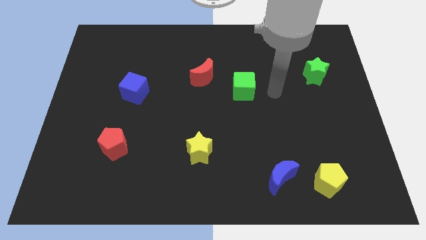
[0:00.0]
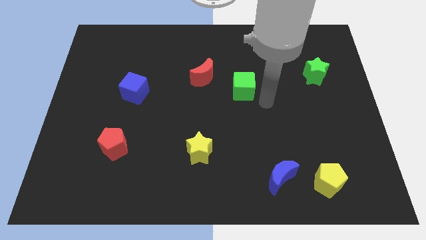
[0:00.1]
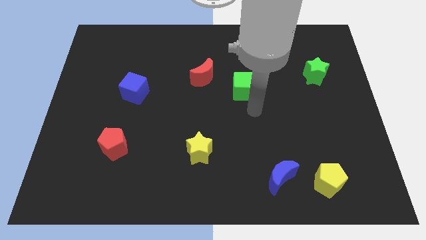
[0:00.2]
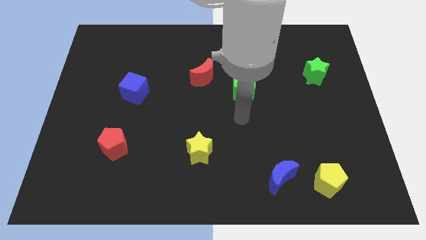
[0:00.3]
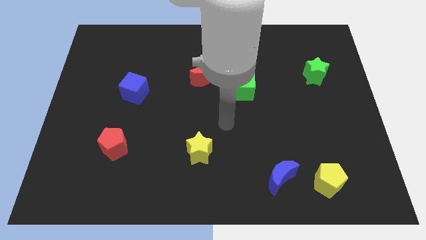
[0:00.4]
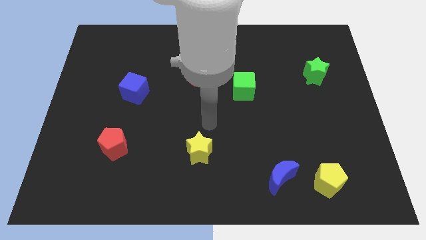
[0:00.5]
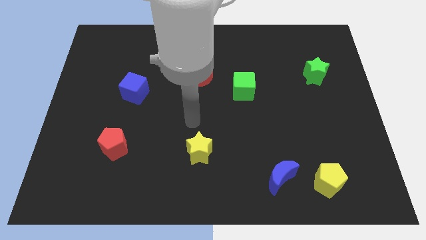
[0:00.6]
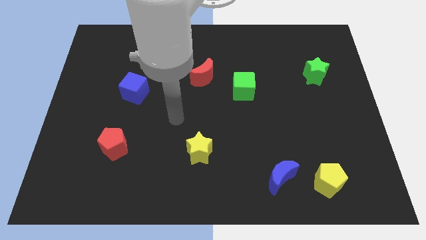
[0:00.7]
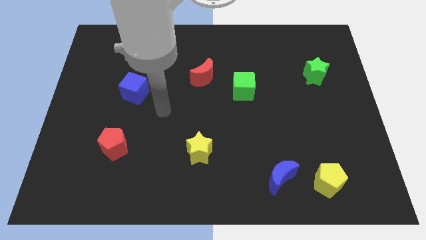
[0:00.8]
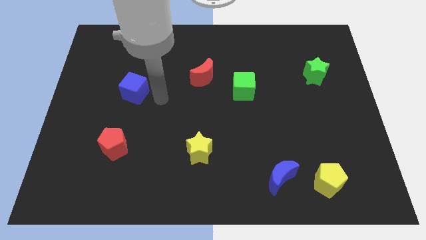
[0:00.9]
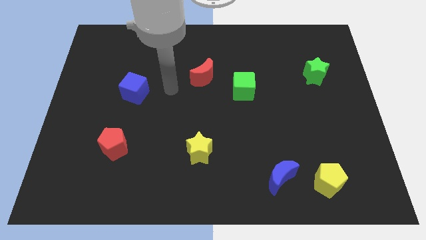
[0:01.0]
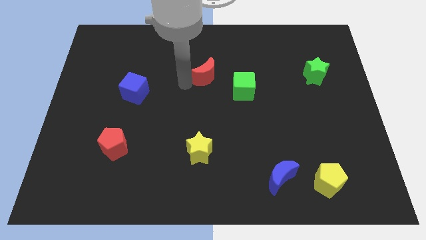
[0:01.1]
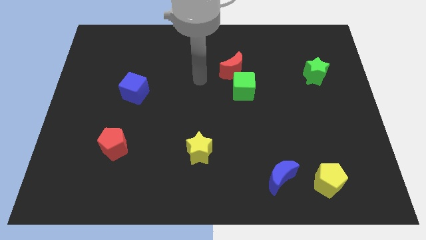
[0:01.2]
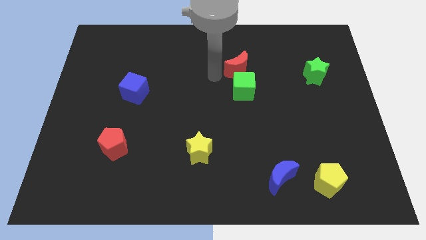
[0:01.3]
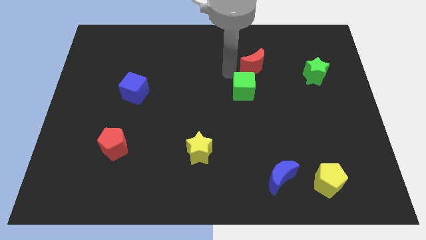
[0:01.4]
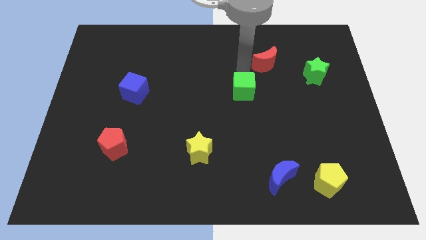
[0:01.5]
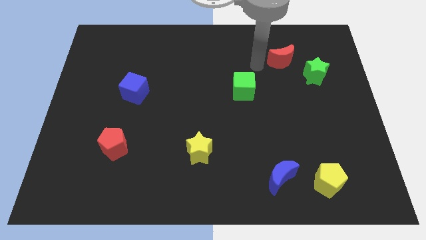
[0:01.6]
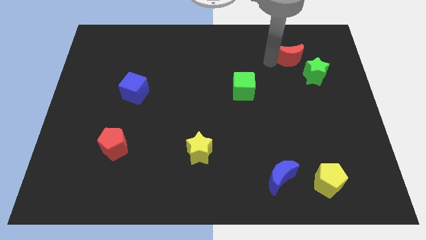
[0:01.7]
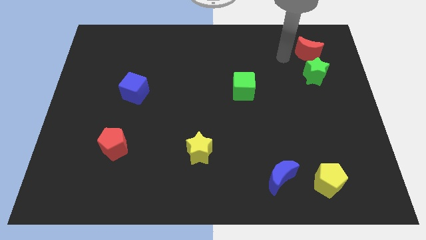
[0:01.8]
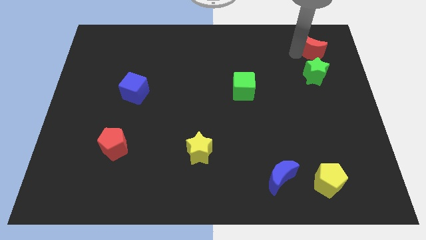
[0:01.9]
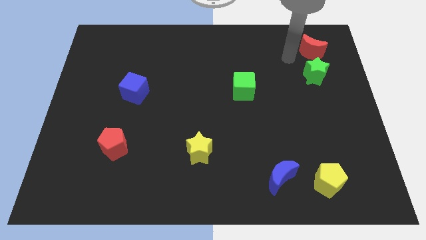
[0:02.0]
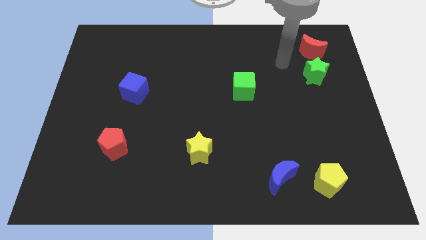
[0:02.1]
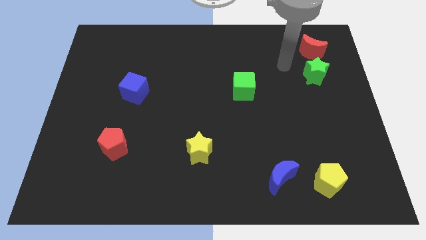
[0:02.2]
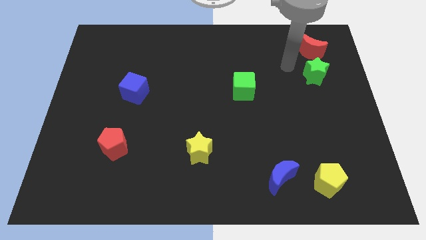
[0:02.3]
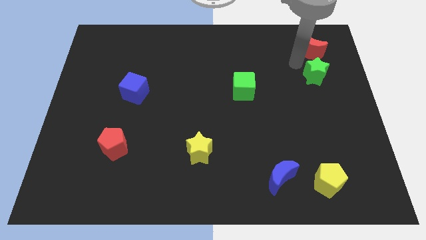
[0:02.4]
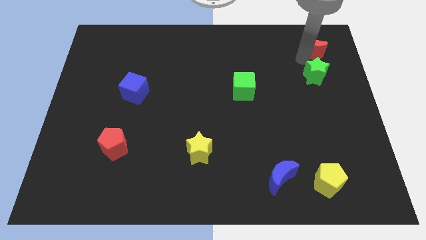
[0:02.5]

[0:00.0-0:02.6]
place the red moon down to the green star

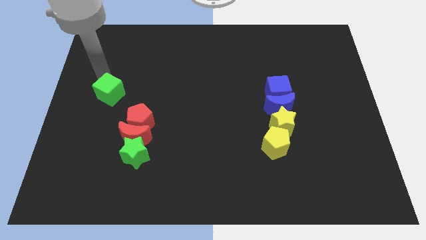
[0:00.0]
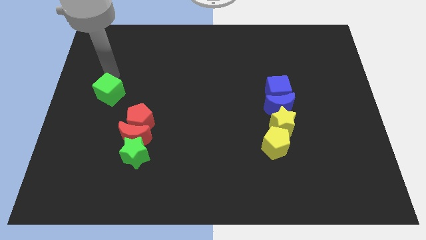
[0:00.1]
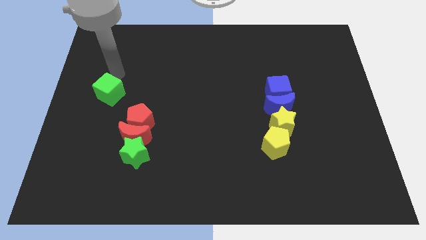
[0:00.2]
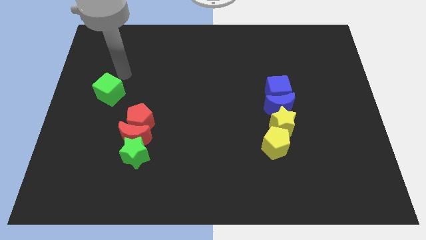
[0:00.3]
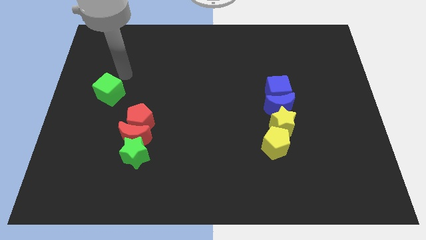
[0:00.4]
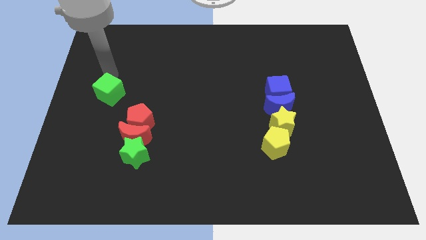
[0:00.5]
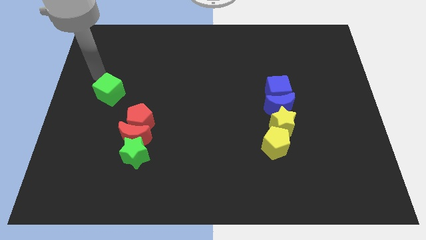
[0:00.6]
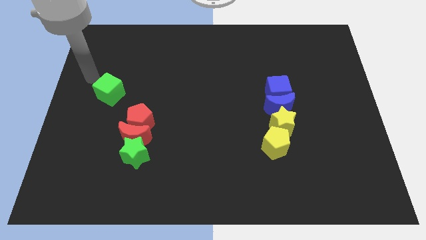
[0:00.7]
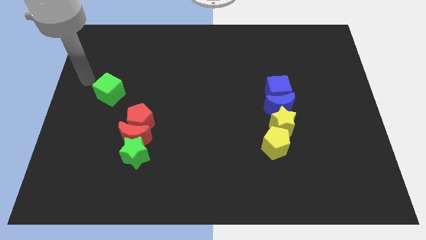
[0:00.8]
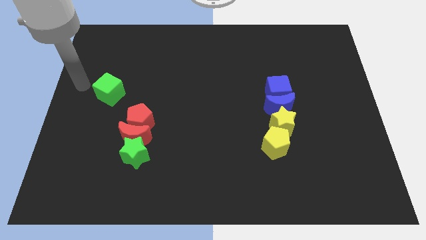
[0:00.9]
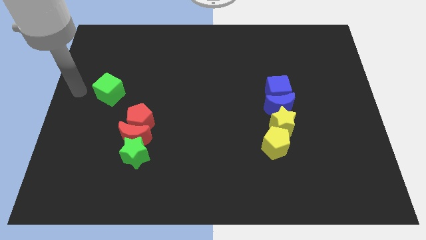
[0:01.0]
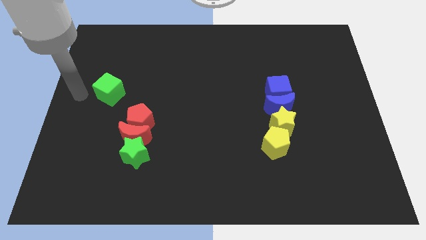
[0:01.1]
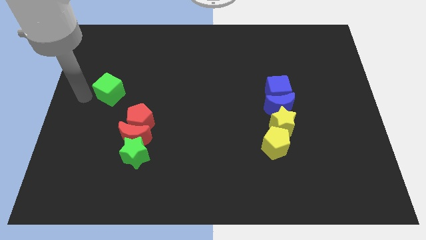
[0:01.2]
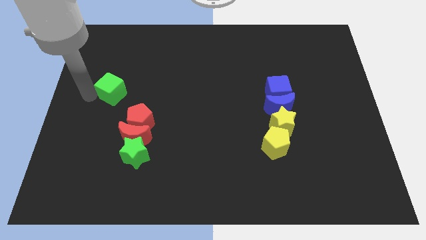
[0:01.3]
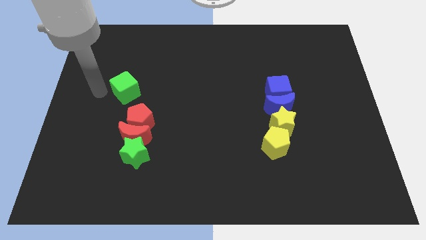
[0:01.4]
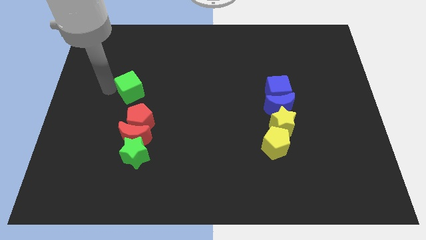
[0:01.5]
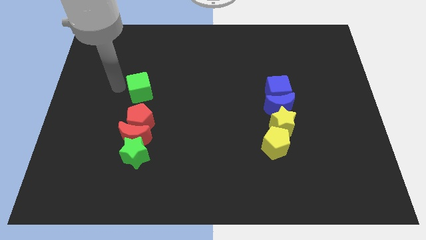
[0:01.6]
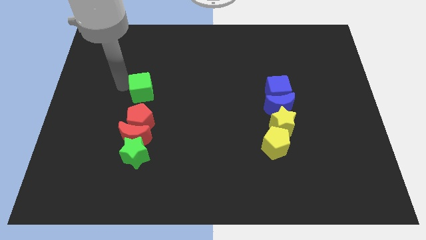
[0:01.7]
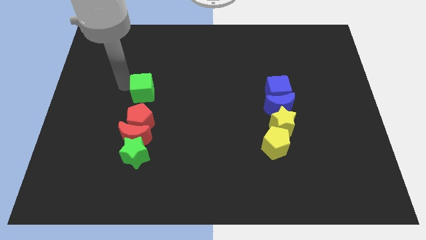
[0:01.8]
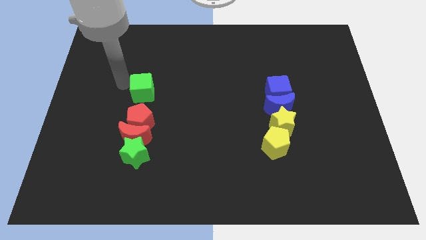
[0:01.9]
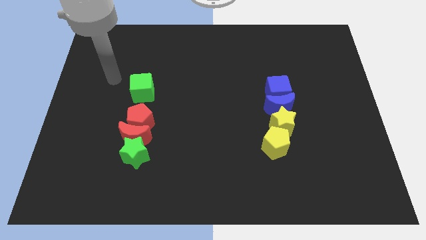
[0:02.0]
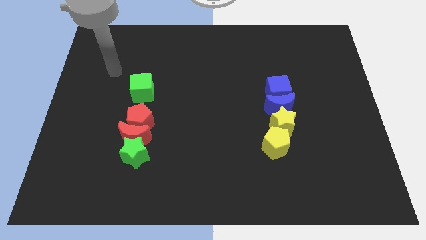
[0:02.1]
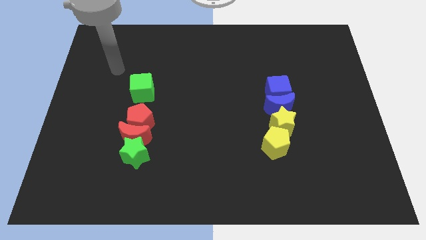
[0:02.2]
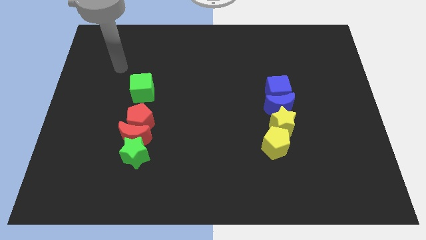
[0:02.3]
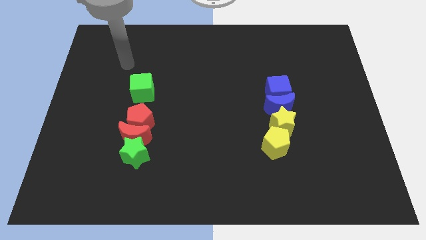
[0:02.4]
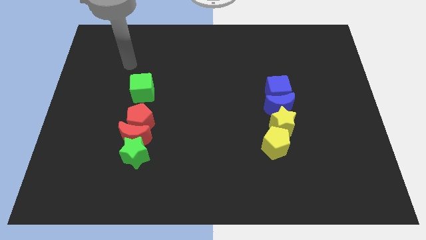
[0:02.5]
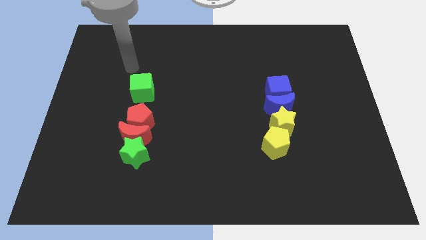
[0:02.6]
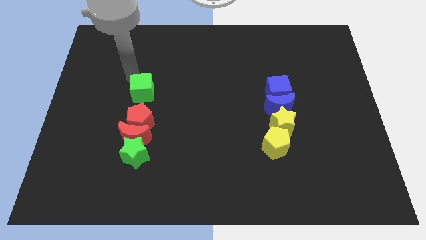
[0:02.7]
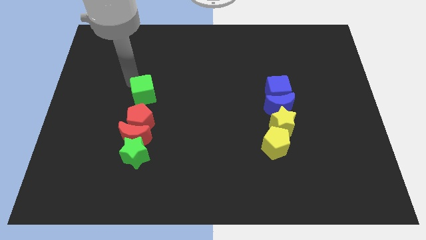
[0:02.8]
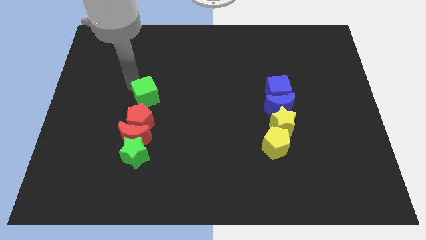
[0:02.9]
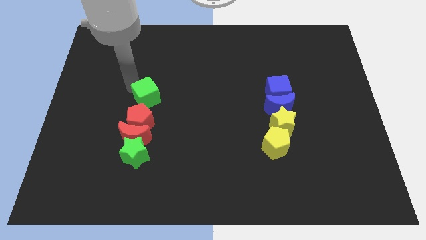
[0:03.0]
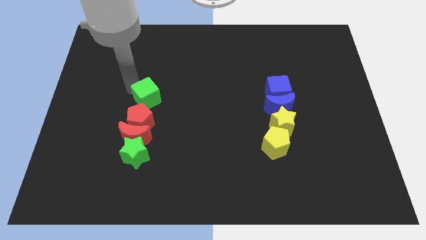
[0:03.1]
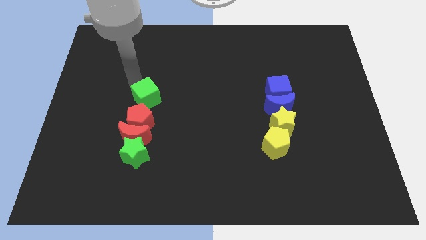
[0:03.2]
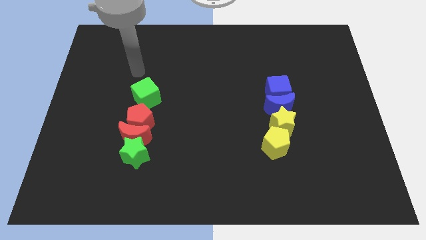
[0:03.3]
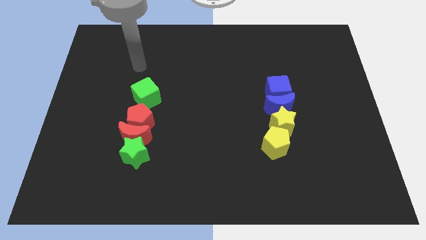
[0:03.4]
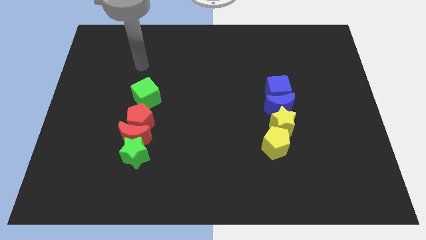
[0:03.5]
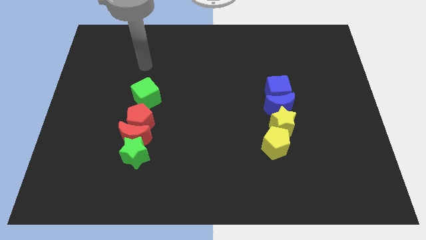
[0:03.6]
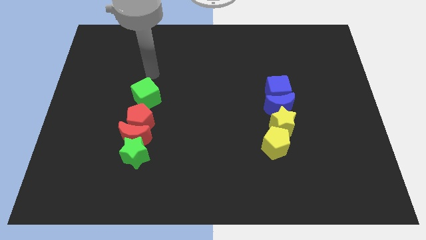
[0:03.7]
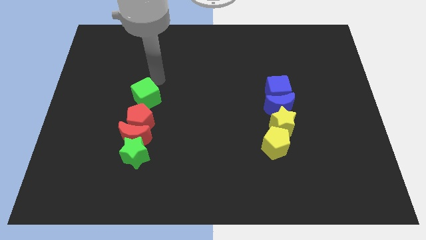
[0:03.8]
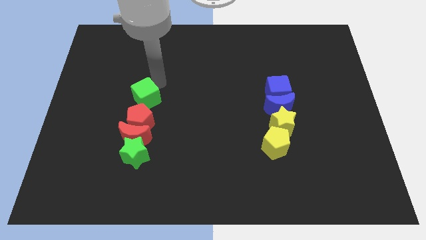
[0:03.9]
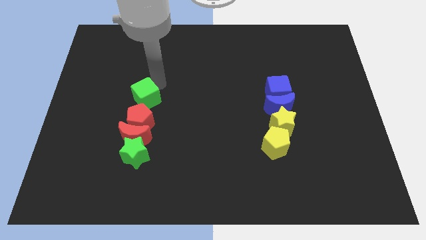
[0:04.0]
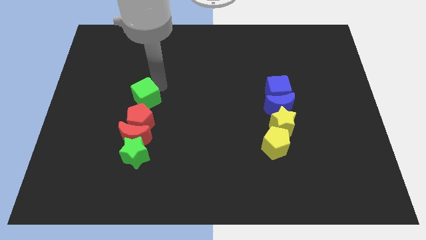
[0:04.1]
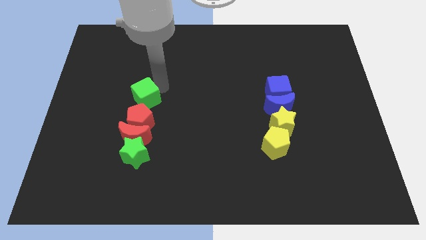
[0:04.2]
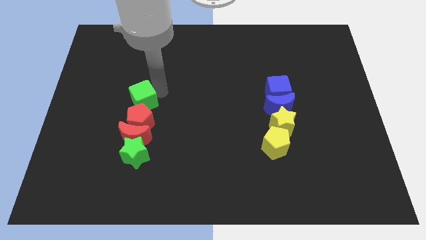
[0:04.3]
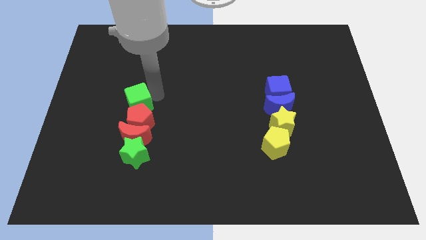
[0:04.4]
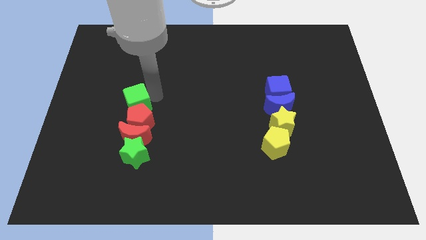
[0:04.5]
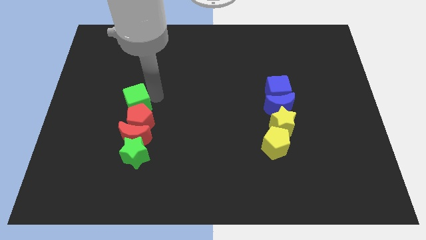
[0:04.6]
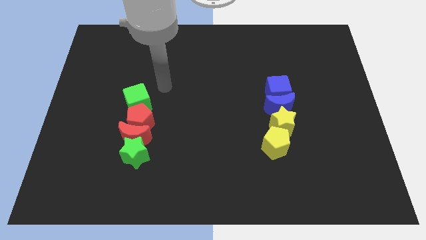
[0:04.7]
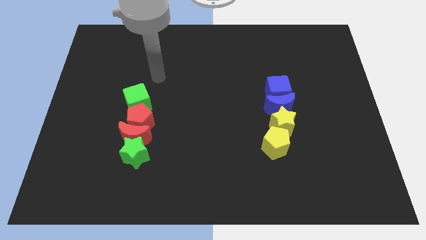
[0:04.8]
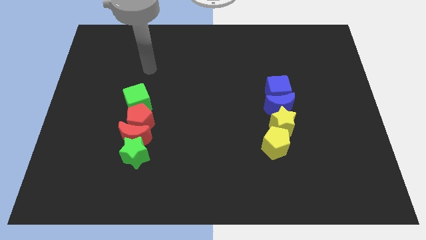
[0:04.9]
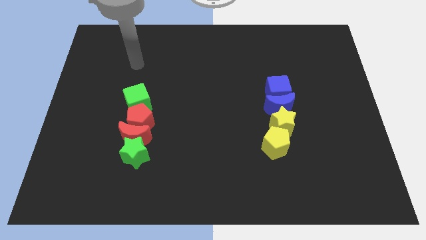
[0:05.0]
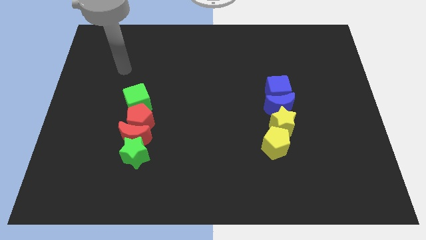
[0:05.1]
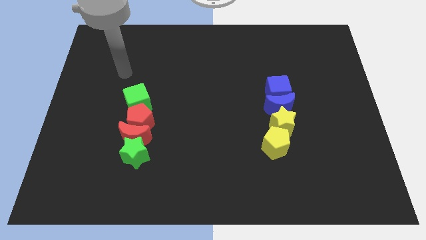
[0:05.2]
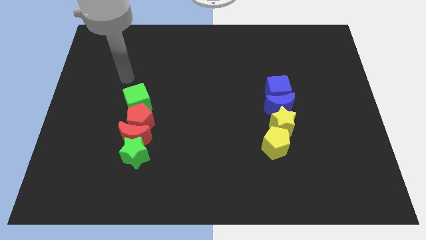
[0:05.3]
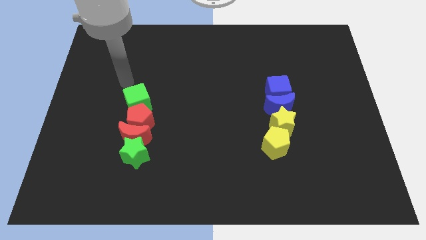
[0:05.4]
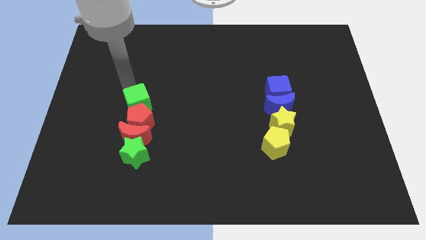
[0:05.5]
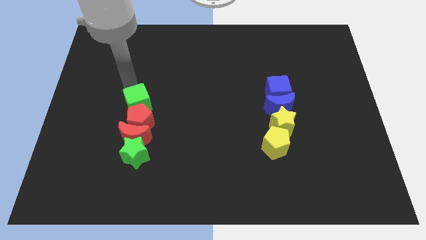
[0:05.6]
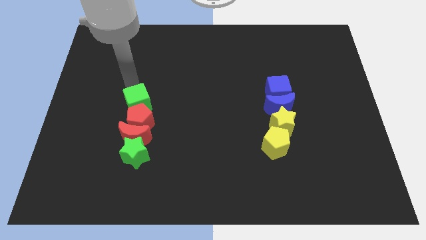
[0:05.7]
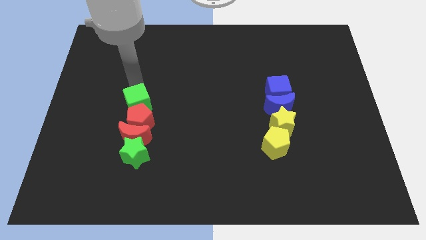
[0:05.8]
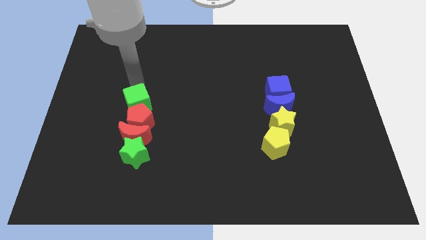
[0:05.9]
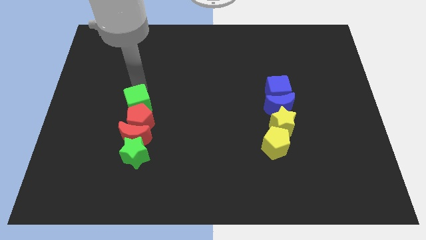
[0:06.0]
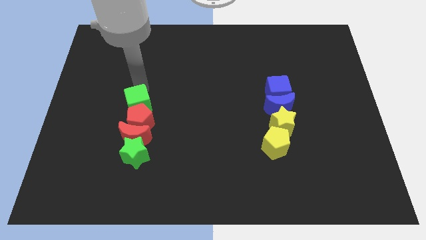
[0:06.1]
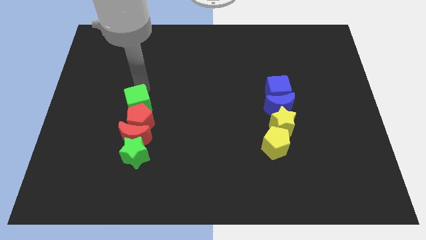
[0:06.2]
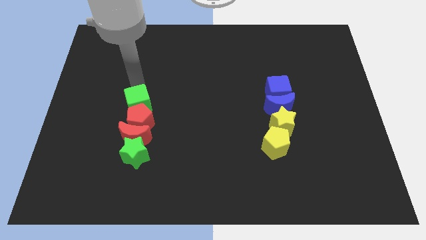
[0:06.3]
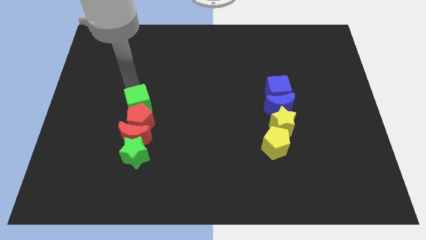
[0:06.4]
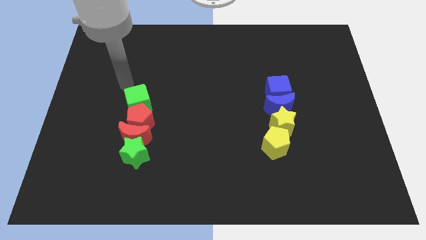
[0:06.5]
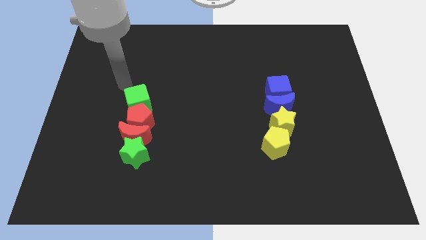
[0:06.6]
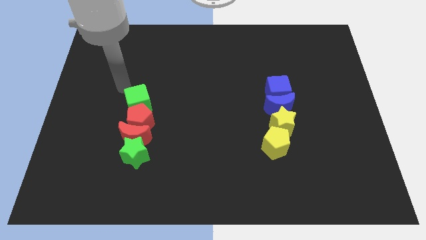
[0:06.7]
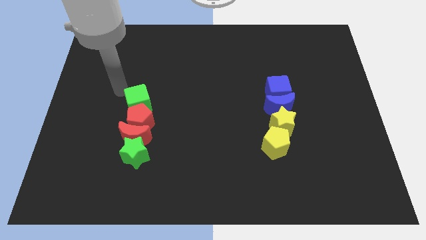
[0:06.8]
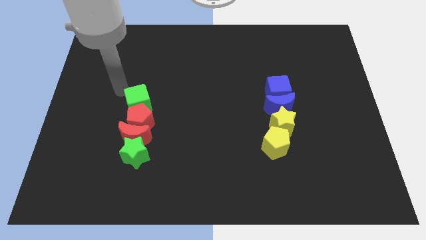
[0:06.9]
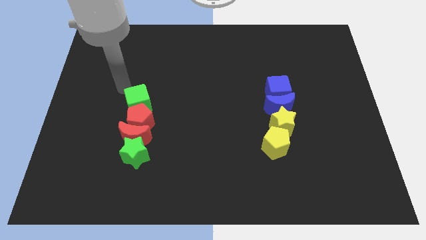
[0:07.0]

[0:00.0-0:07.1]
move the green cube into the top side of the red pentagon
